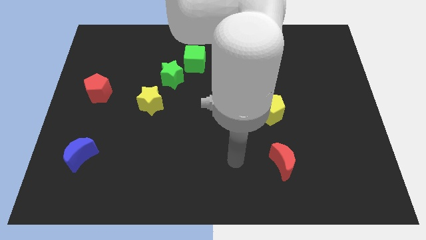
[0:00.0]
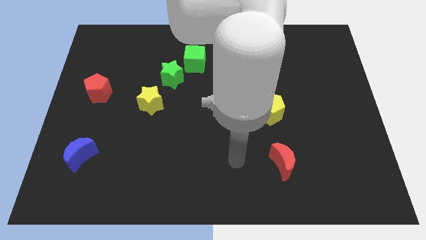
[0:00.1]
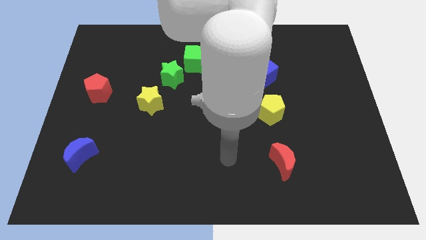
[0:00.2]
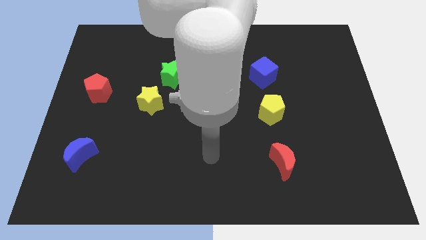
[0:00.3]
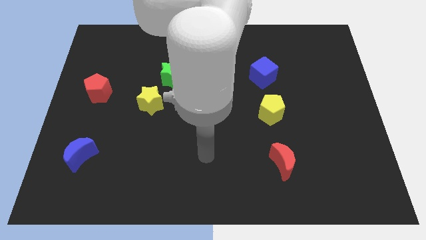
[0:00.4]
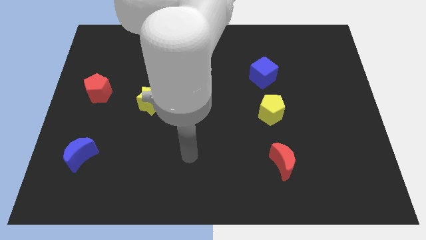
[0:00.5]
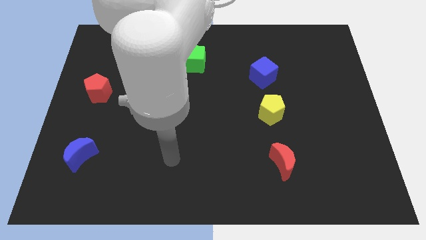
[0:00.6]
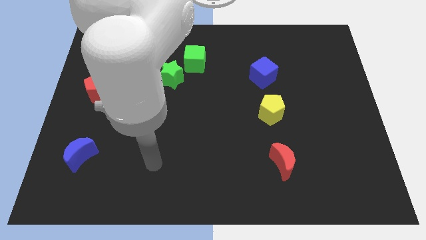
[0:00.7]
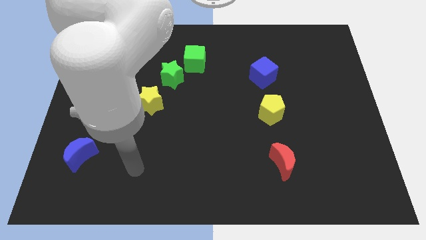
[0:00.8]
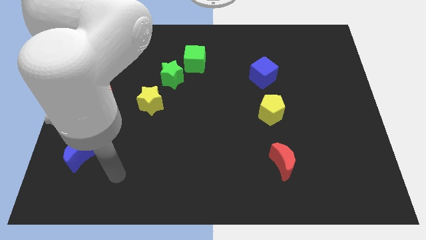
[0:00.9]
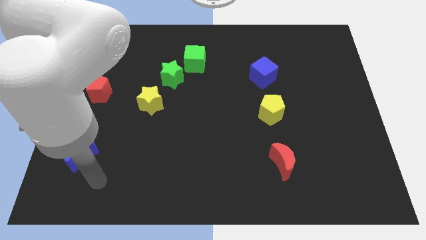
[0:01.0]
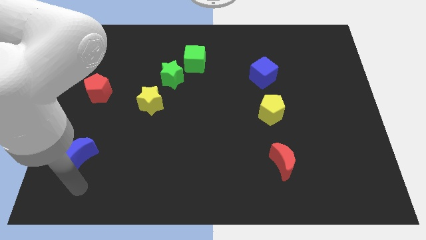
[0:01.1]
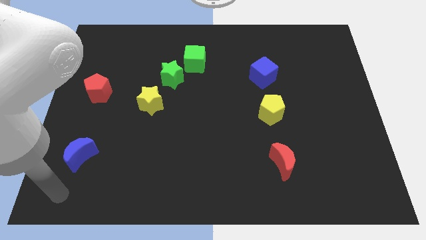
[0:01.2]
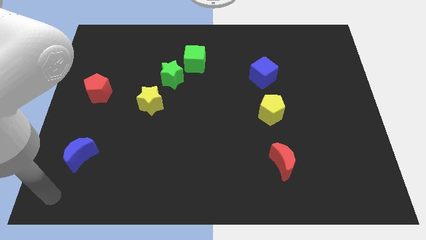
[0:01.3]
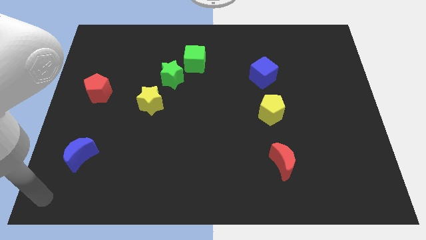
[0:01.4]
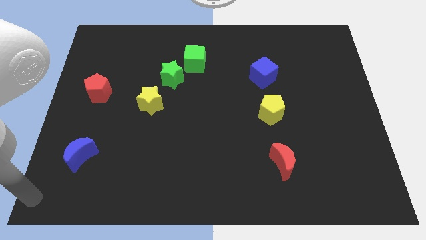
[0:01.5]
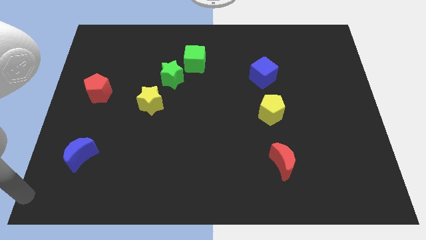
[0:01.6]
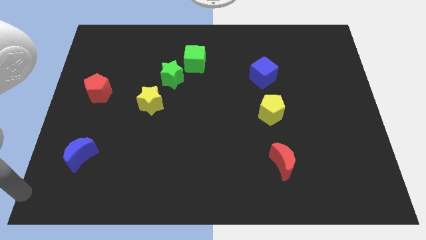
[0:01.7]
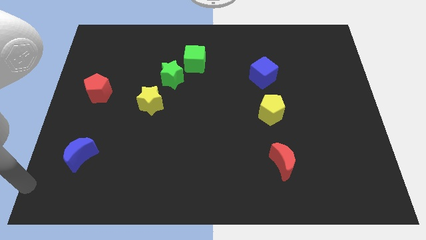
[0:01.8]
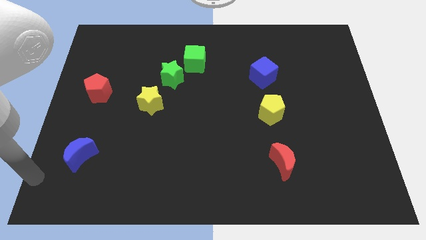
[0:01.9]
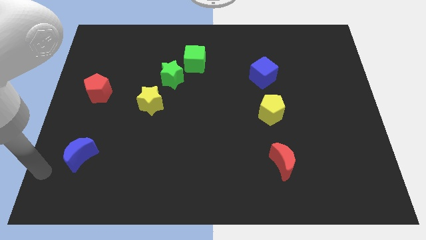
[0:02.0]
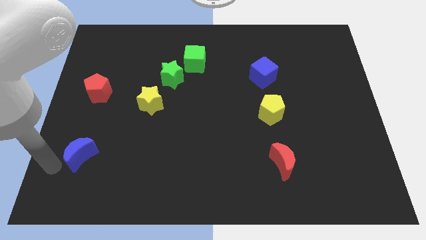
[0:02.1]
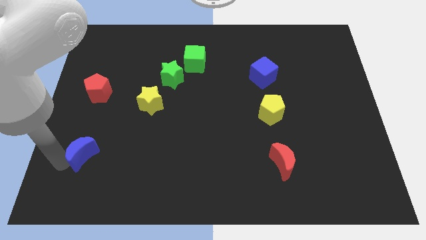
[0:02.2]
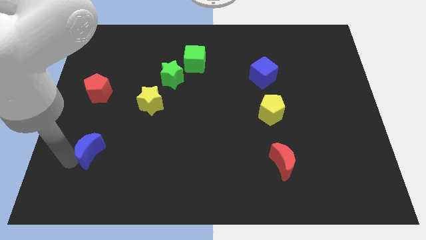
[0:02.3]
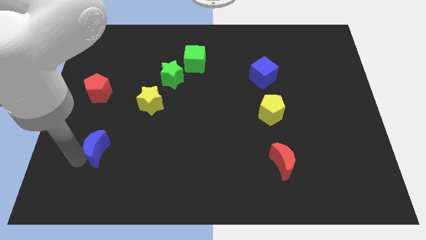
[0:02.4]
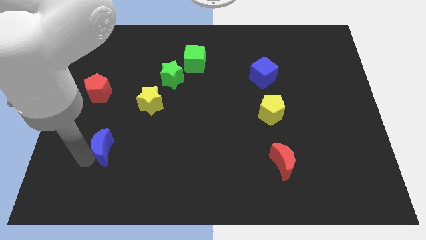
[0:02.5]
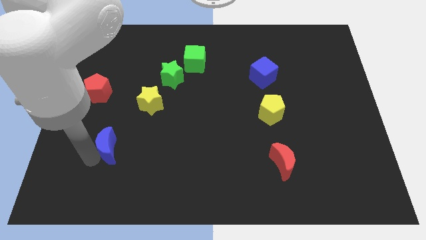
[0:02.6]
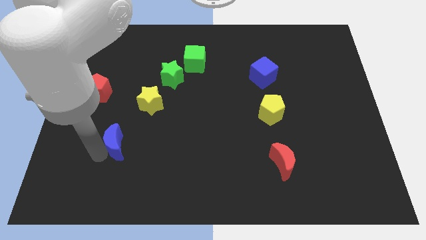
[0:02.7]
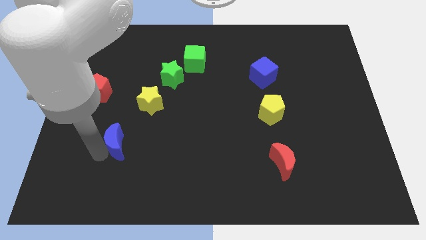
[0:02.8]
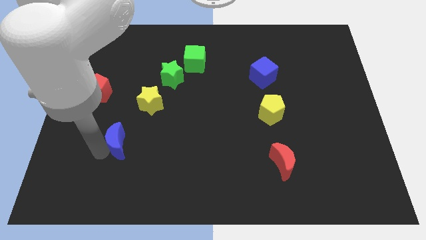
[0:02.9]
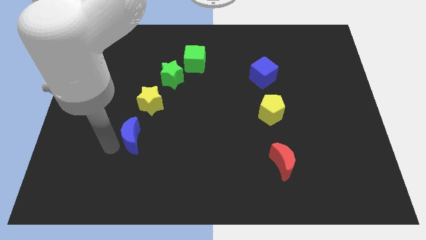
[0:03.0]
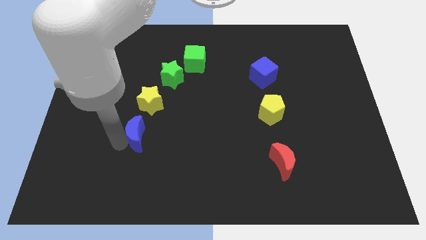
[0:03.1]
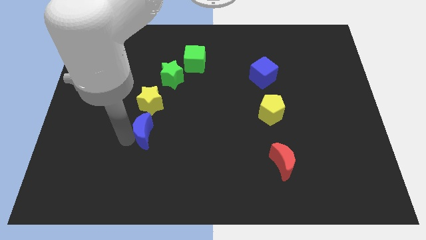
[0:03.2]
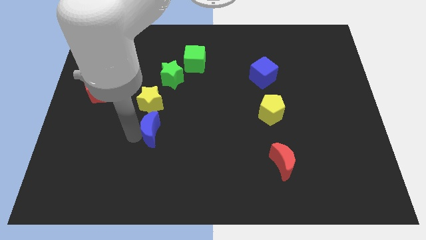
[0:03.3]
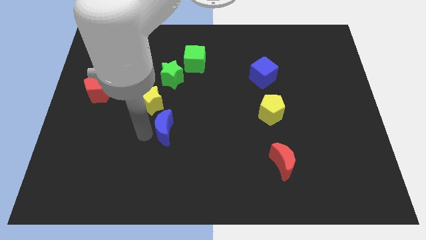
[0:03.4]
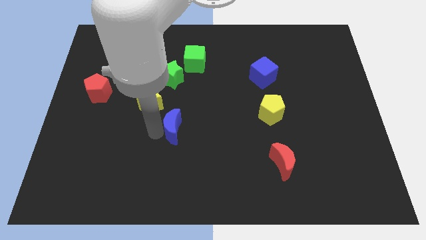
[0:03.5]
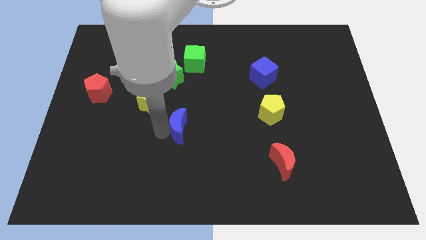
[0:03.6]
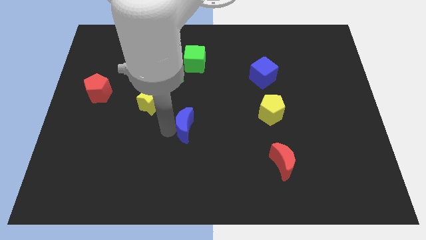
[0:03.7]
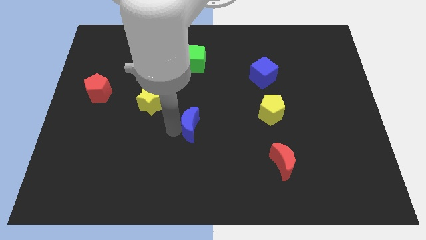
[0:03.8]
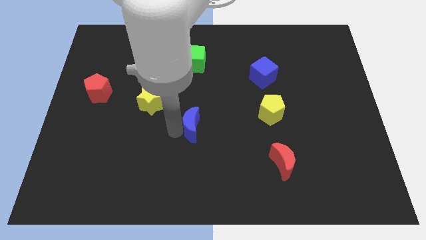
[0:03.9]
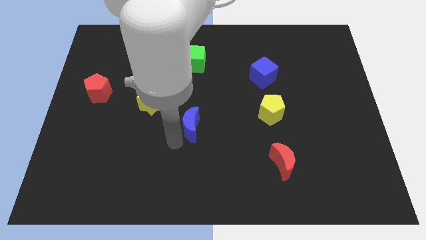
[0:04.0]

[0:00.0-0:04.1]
push the blue crescent below the green cube

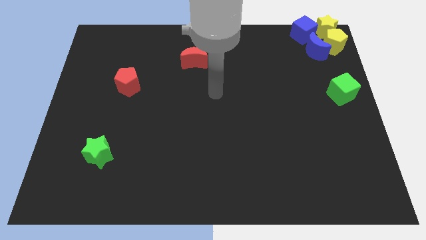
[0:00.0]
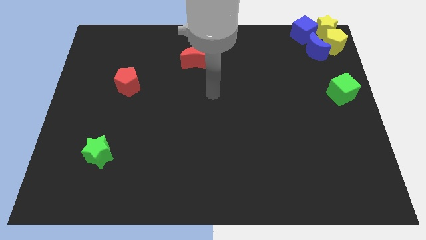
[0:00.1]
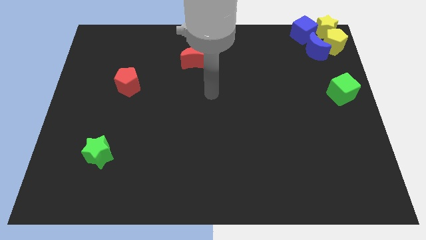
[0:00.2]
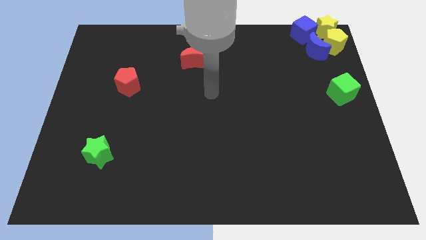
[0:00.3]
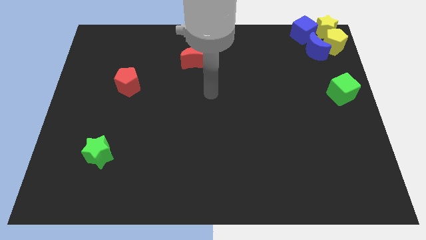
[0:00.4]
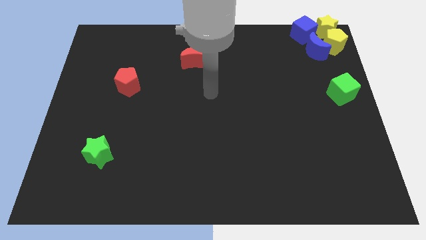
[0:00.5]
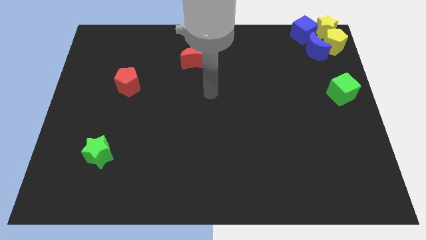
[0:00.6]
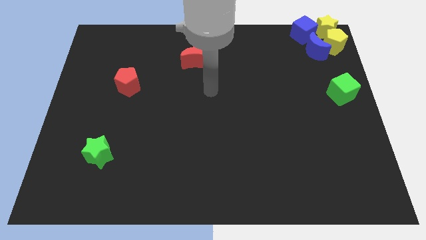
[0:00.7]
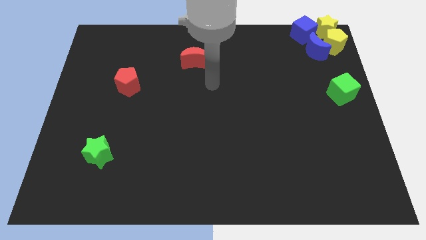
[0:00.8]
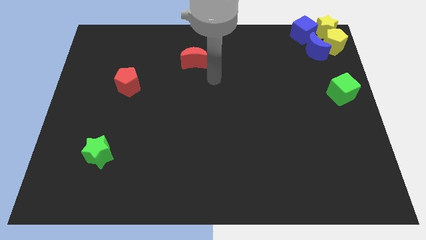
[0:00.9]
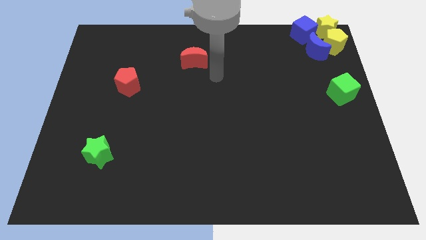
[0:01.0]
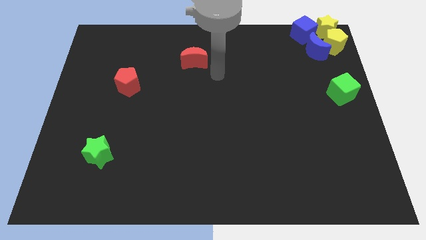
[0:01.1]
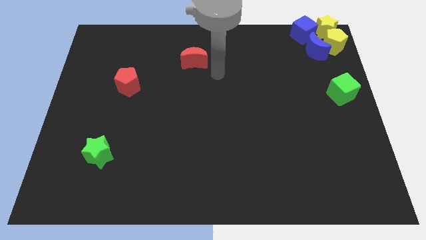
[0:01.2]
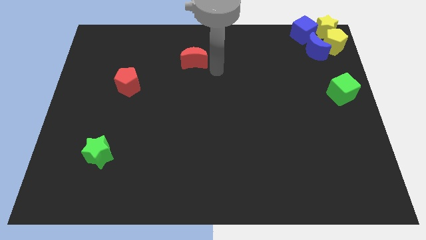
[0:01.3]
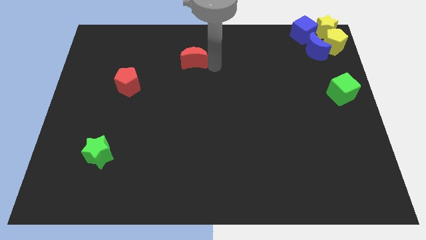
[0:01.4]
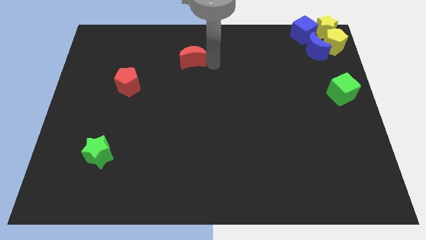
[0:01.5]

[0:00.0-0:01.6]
move the arm at the right side of the red crescent

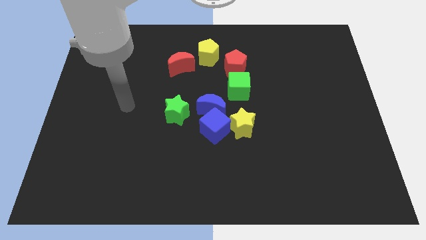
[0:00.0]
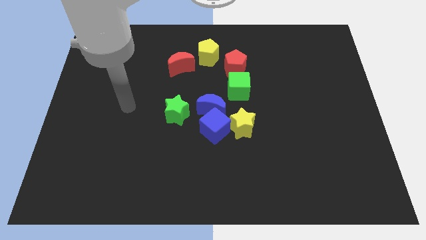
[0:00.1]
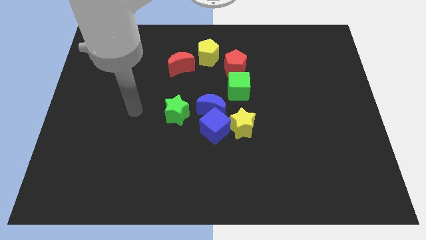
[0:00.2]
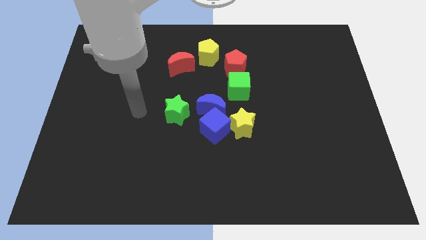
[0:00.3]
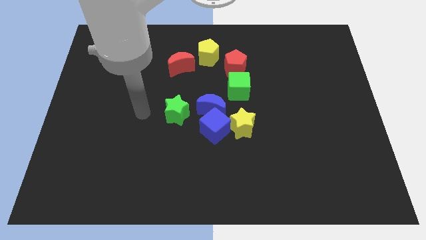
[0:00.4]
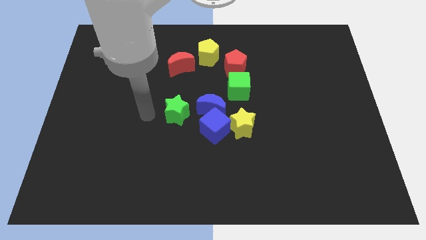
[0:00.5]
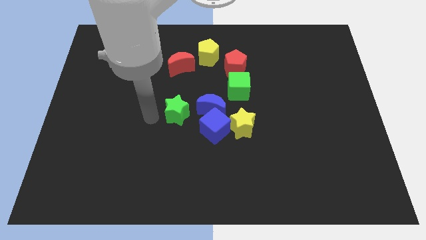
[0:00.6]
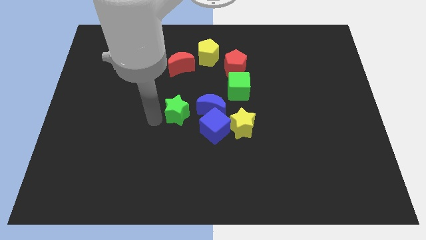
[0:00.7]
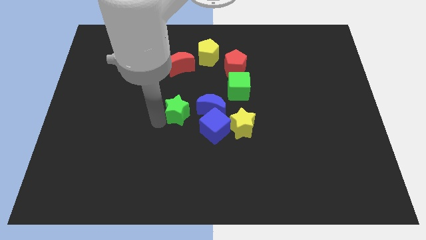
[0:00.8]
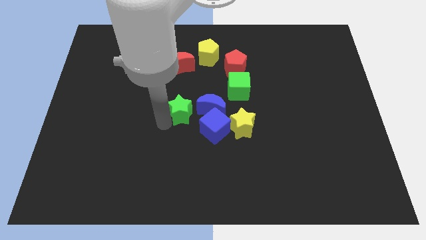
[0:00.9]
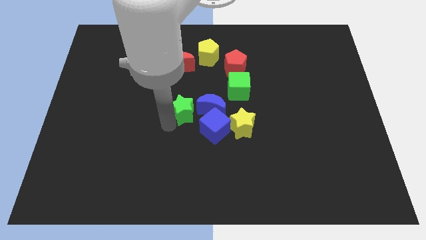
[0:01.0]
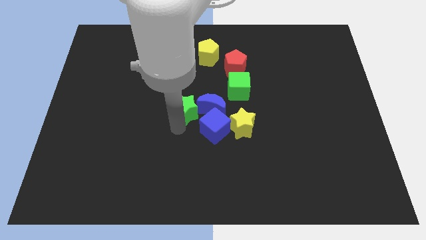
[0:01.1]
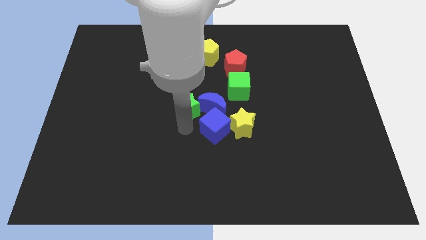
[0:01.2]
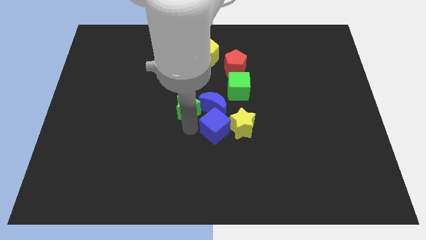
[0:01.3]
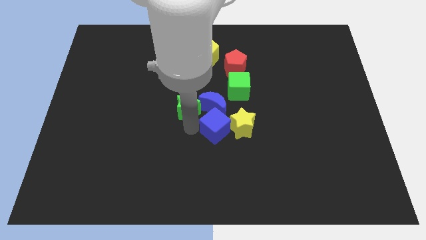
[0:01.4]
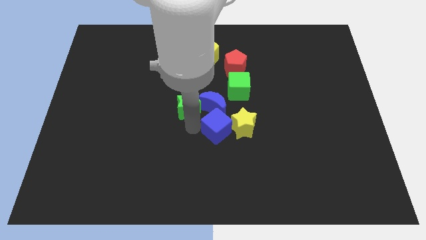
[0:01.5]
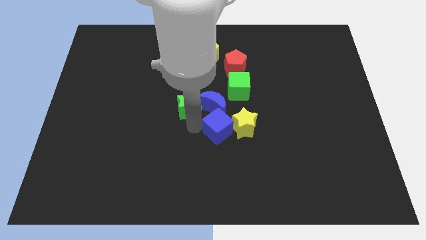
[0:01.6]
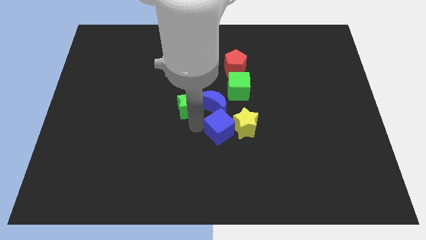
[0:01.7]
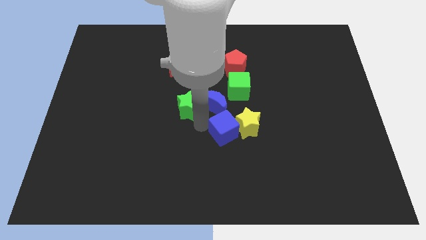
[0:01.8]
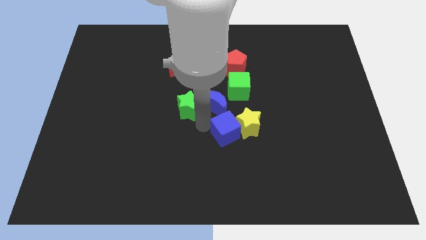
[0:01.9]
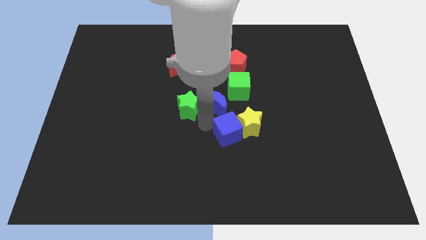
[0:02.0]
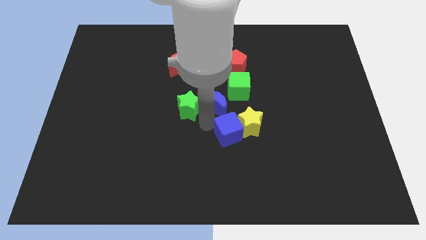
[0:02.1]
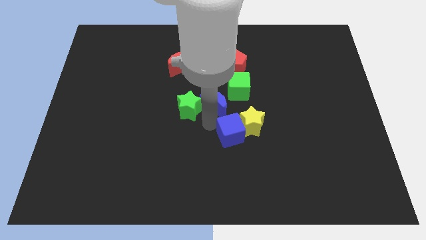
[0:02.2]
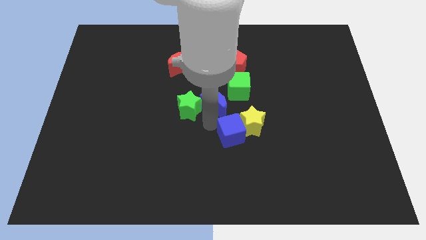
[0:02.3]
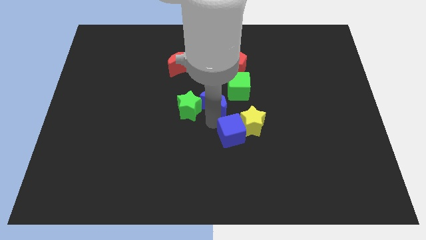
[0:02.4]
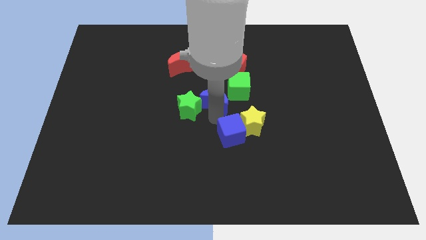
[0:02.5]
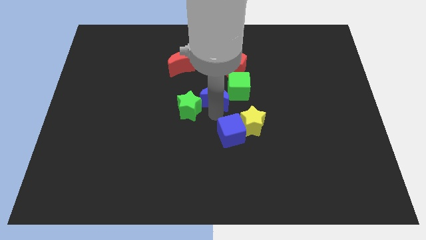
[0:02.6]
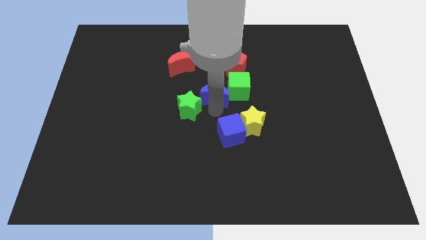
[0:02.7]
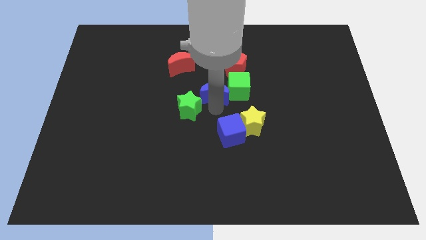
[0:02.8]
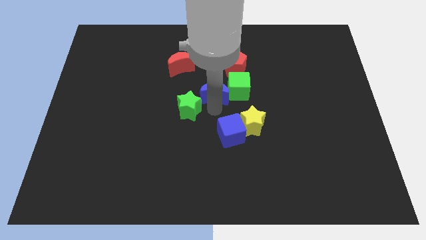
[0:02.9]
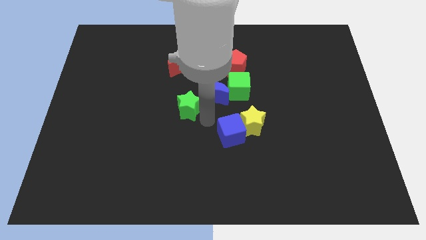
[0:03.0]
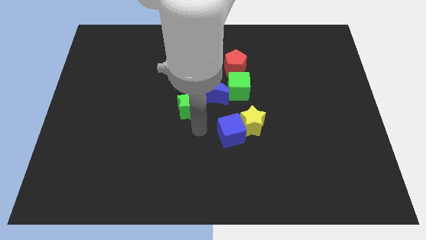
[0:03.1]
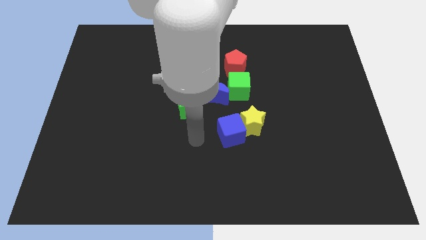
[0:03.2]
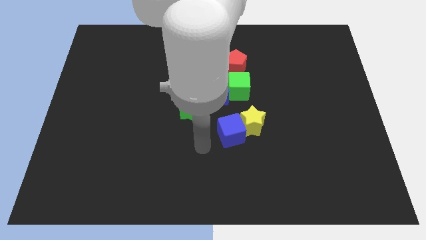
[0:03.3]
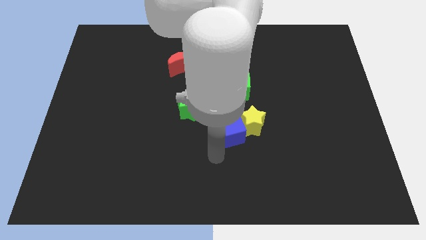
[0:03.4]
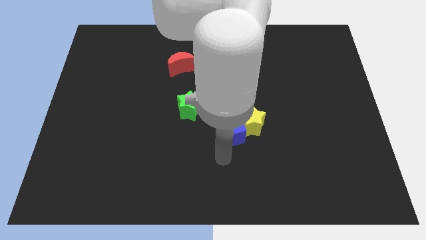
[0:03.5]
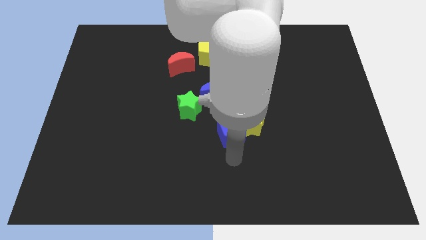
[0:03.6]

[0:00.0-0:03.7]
push the blue moon slightly to the top side of the board
